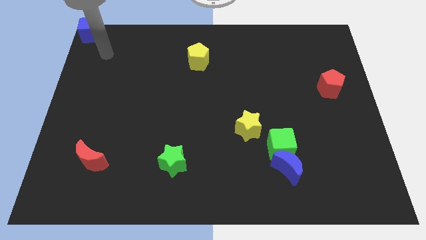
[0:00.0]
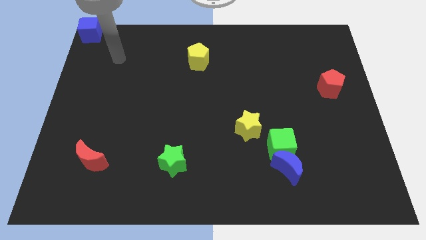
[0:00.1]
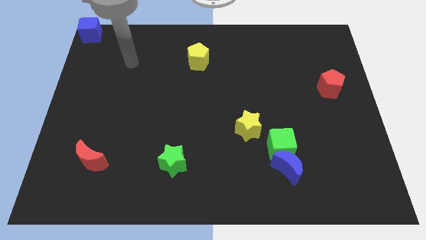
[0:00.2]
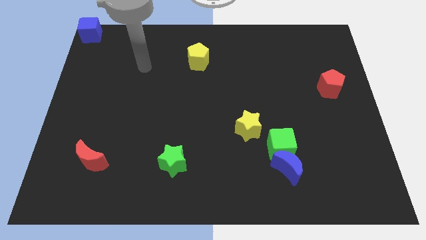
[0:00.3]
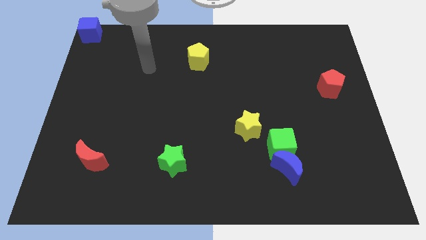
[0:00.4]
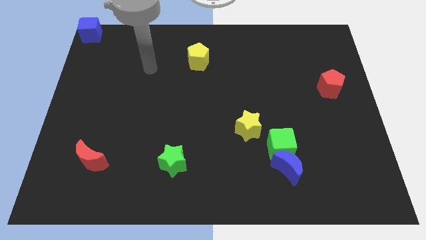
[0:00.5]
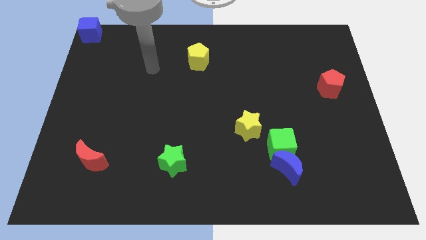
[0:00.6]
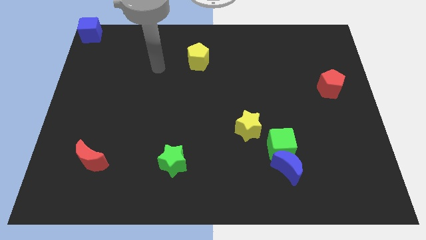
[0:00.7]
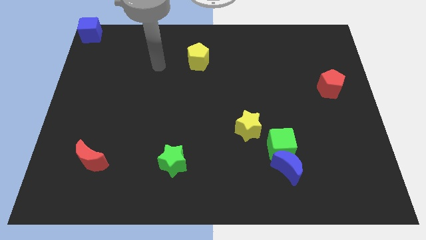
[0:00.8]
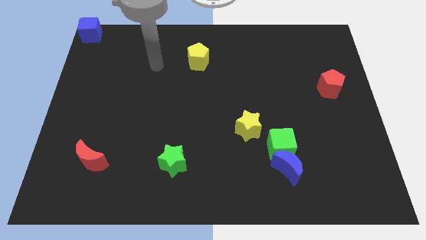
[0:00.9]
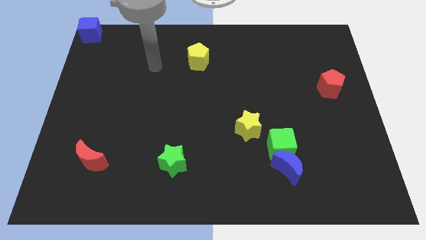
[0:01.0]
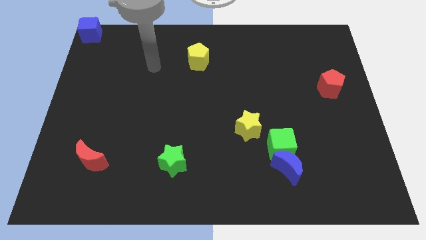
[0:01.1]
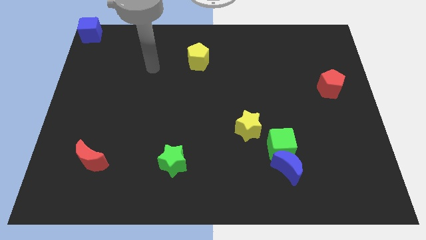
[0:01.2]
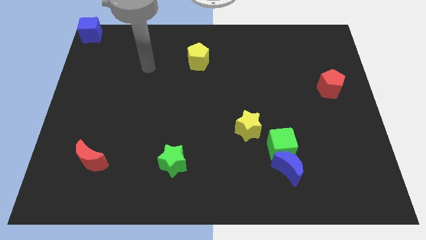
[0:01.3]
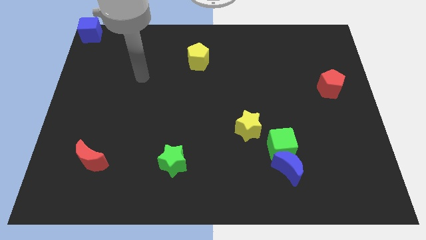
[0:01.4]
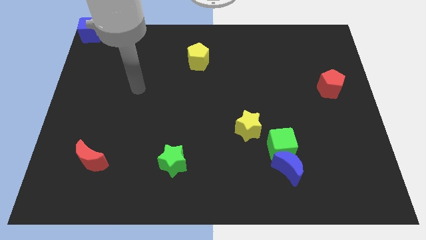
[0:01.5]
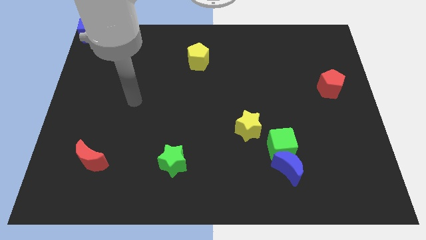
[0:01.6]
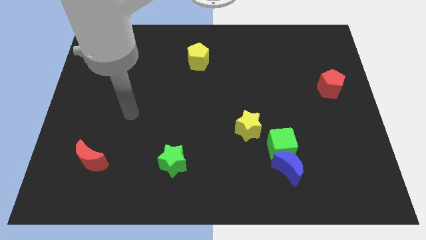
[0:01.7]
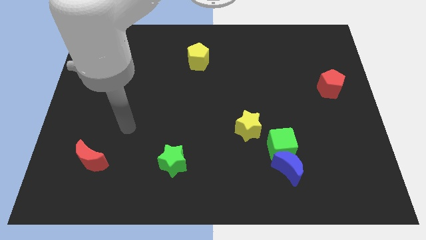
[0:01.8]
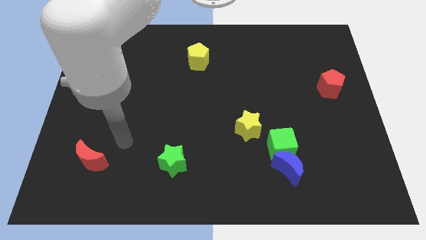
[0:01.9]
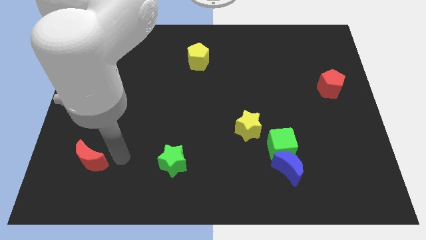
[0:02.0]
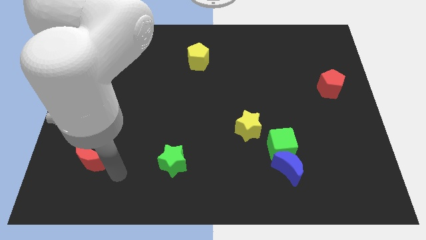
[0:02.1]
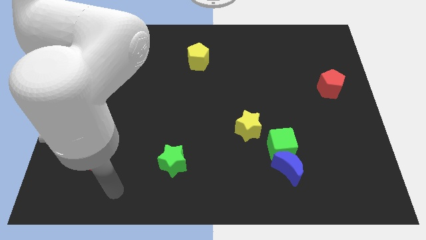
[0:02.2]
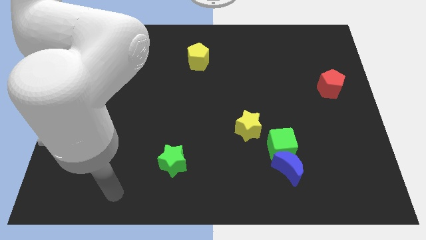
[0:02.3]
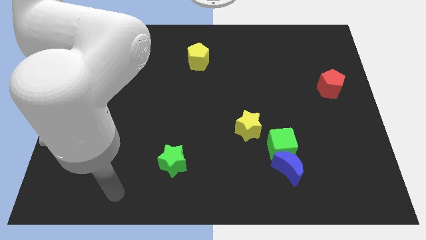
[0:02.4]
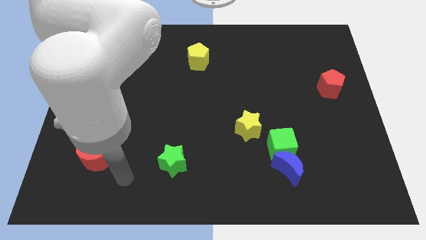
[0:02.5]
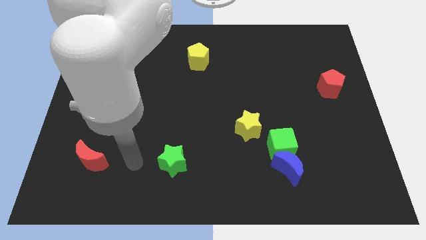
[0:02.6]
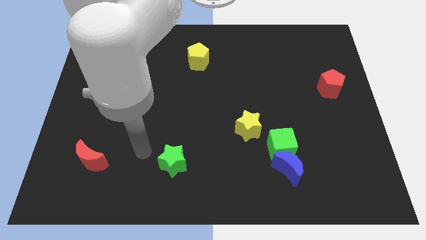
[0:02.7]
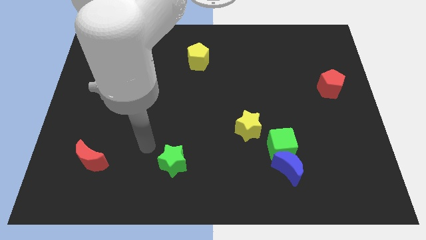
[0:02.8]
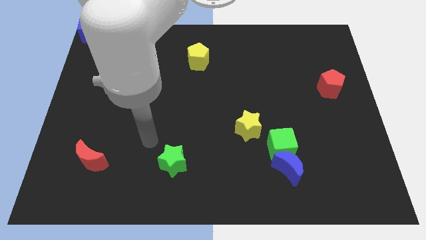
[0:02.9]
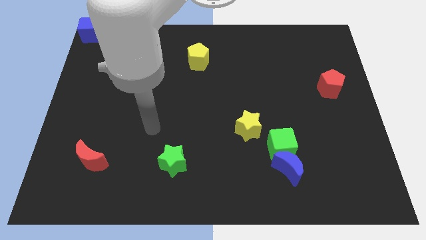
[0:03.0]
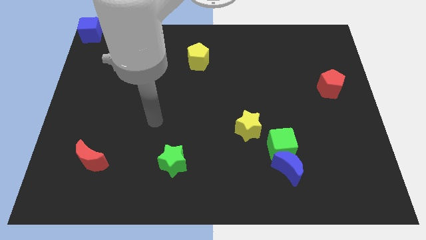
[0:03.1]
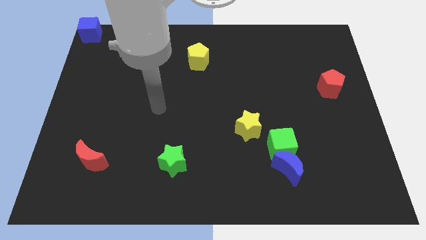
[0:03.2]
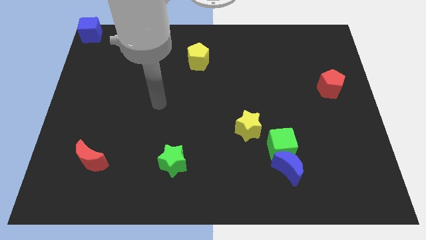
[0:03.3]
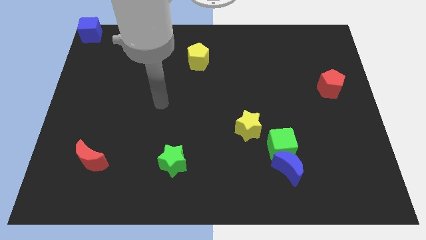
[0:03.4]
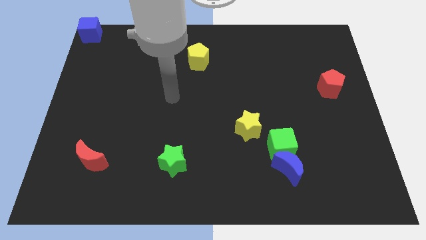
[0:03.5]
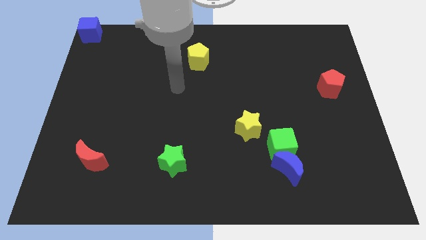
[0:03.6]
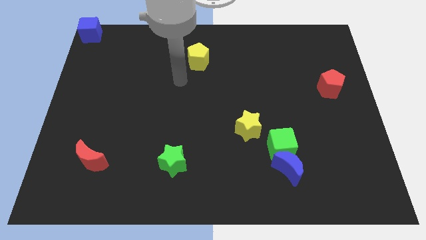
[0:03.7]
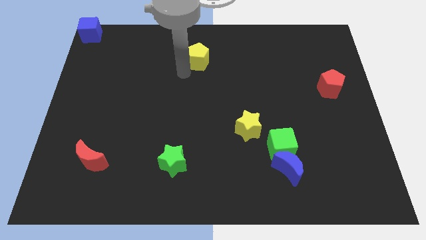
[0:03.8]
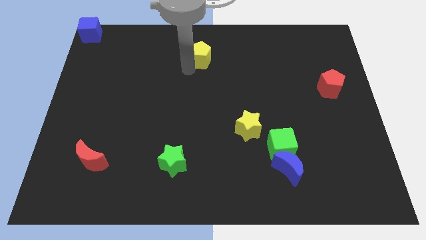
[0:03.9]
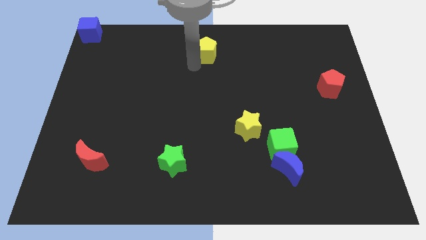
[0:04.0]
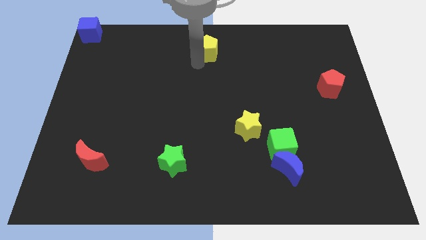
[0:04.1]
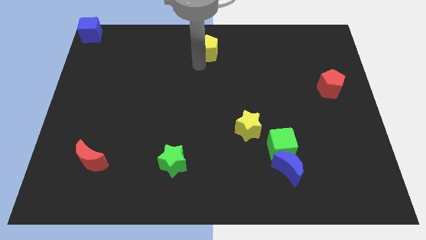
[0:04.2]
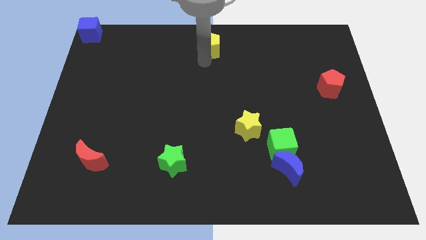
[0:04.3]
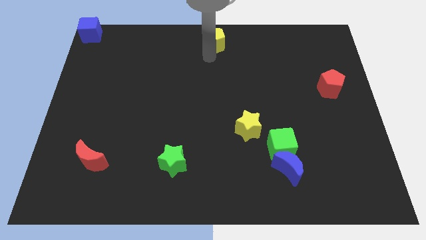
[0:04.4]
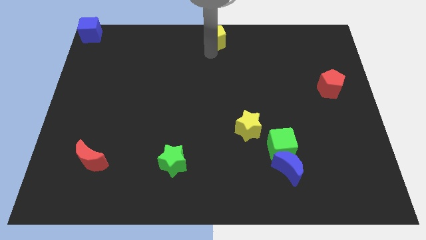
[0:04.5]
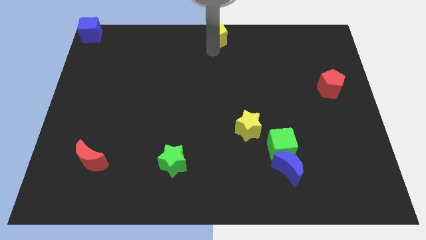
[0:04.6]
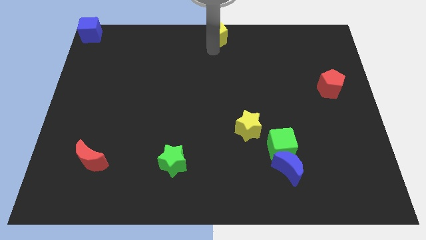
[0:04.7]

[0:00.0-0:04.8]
move the yellow pentagon to the top center of the board

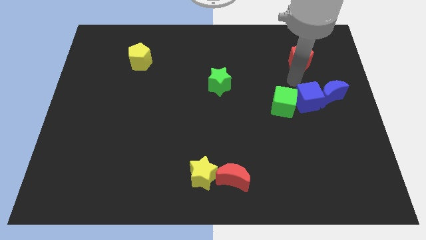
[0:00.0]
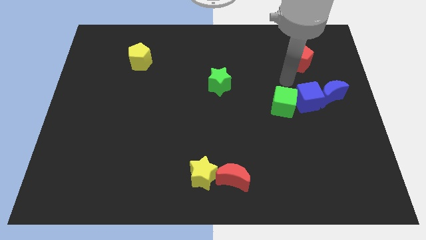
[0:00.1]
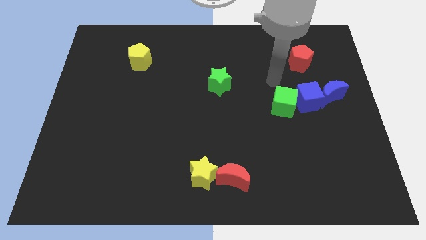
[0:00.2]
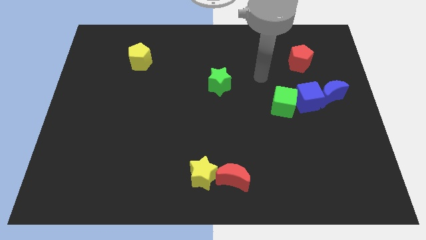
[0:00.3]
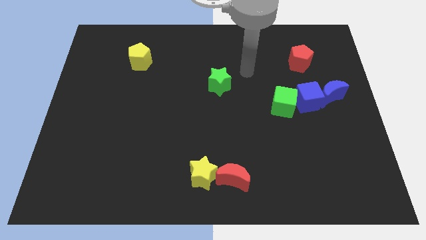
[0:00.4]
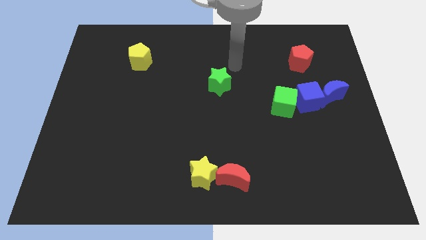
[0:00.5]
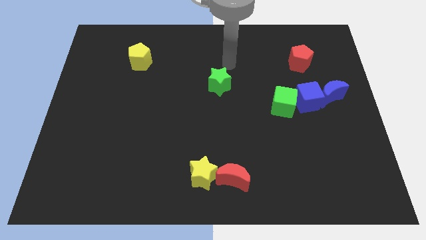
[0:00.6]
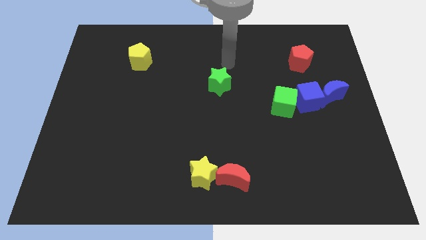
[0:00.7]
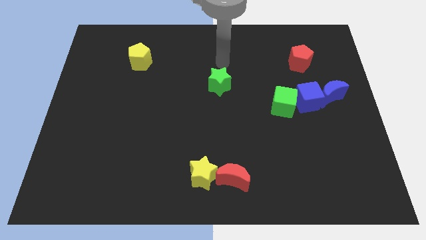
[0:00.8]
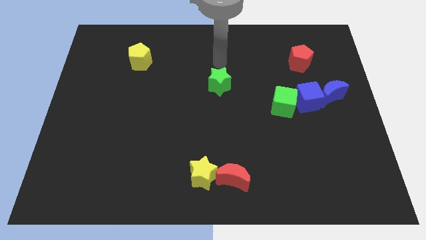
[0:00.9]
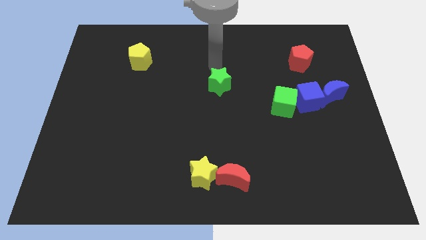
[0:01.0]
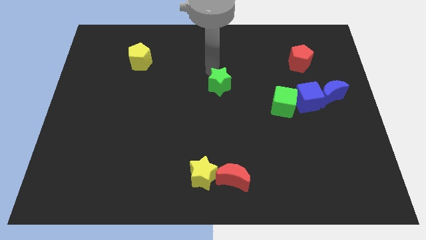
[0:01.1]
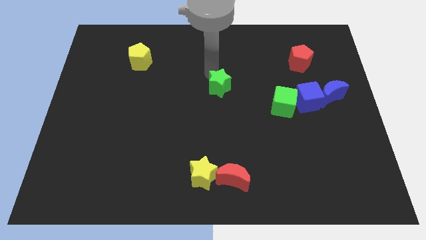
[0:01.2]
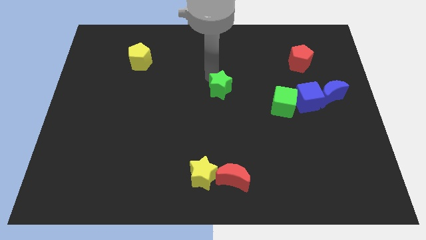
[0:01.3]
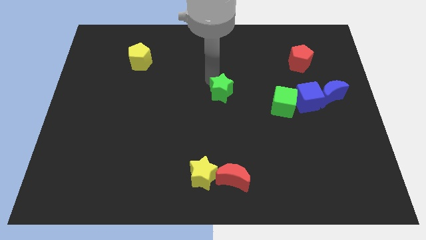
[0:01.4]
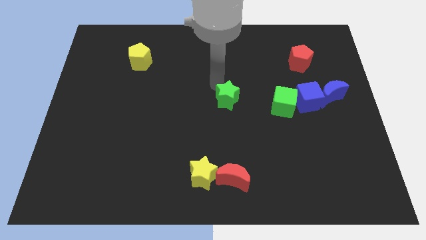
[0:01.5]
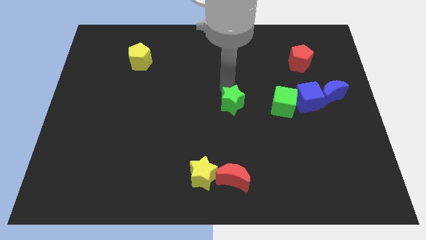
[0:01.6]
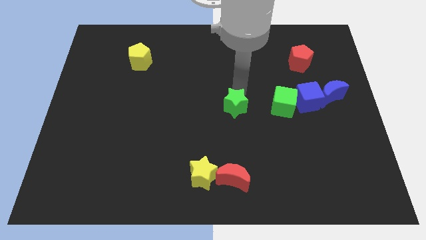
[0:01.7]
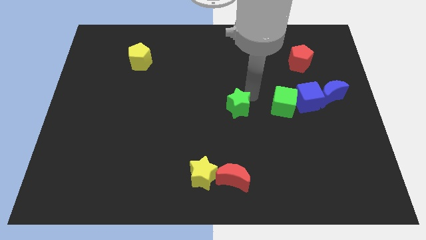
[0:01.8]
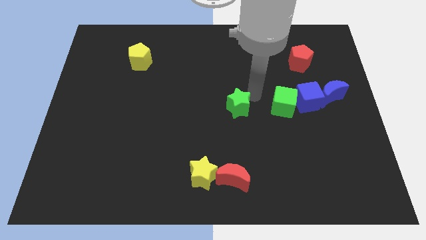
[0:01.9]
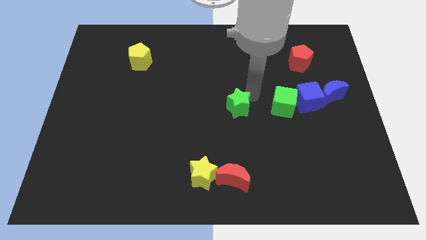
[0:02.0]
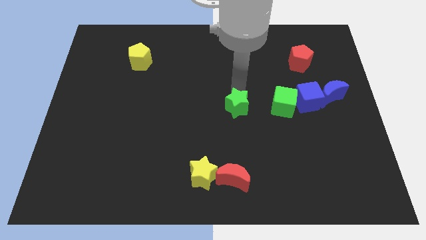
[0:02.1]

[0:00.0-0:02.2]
move the green star horizontally left to the green cube

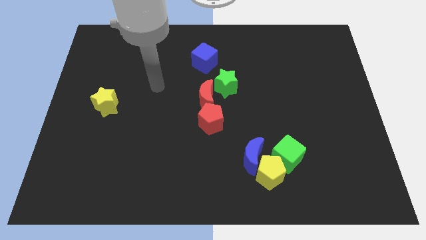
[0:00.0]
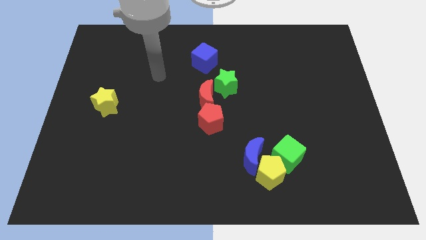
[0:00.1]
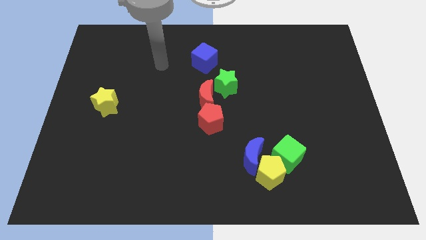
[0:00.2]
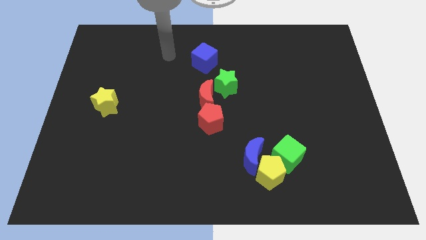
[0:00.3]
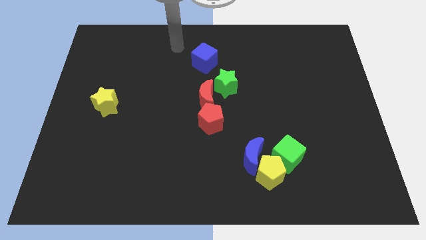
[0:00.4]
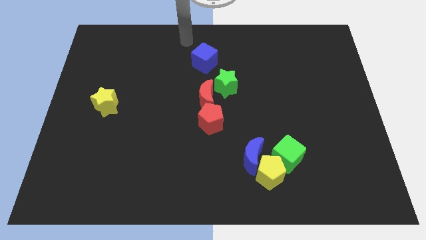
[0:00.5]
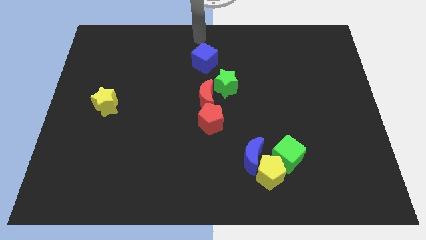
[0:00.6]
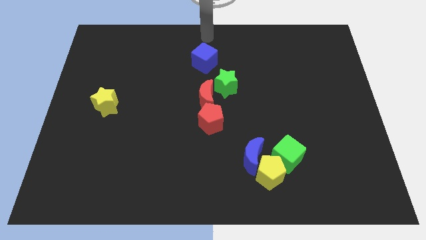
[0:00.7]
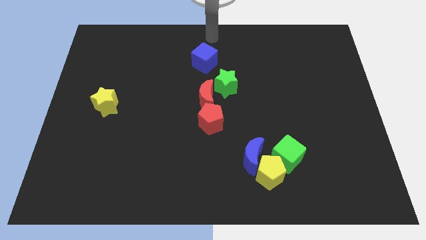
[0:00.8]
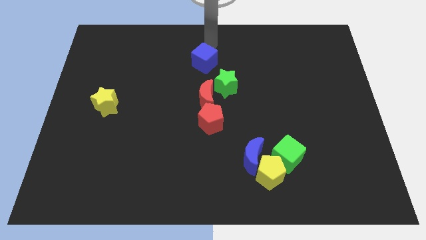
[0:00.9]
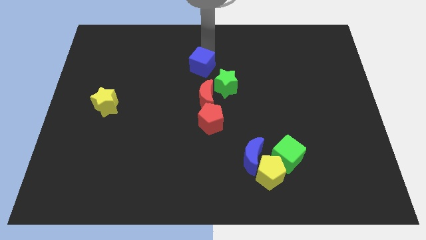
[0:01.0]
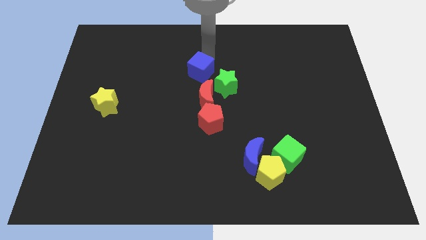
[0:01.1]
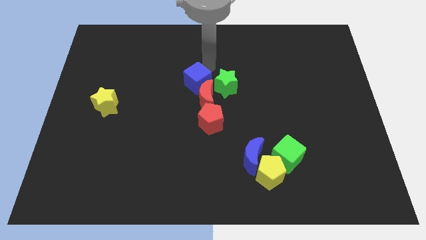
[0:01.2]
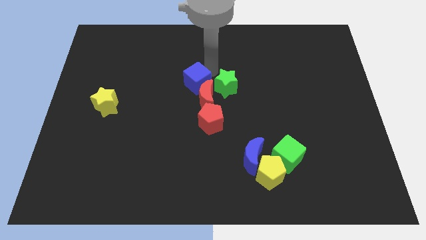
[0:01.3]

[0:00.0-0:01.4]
push the blue cube into the red crescent

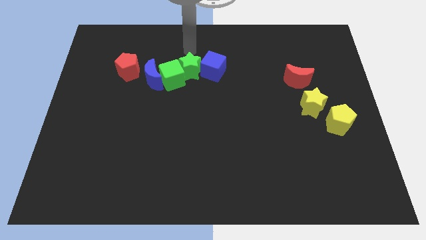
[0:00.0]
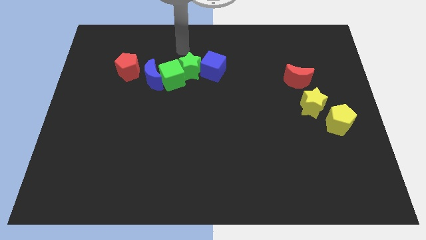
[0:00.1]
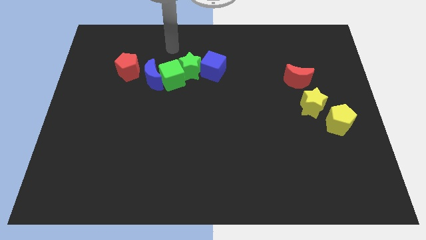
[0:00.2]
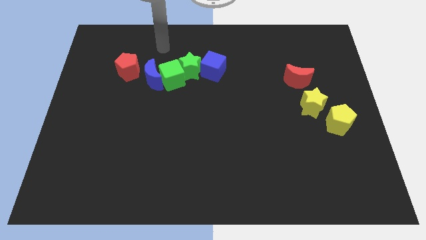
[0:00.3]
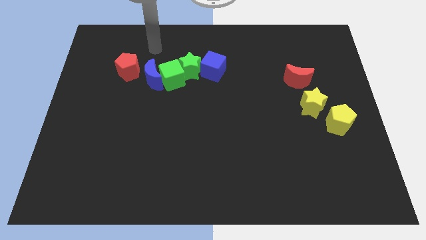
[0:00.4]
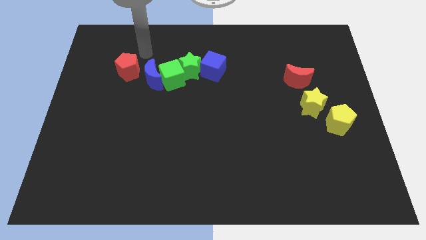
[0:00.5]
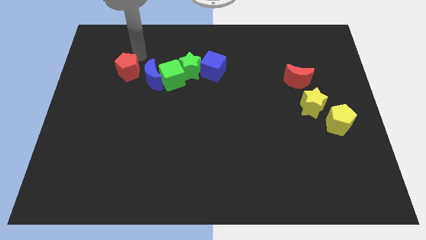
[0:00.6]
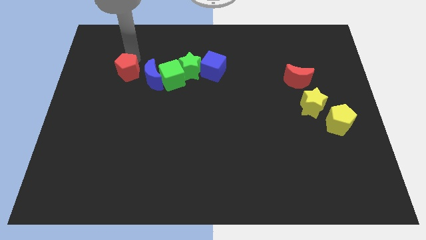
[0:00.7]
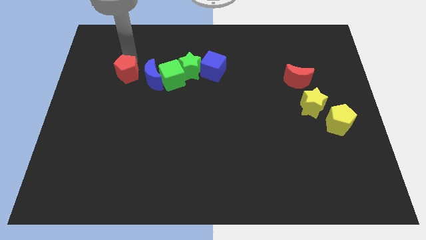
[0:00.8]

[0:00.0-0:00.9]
slightly push red pentagon downwards
